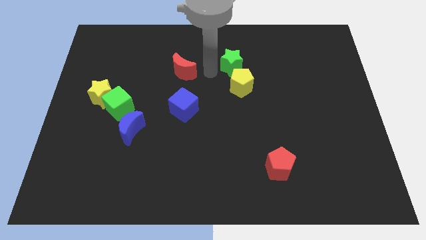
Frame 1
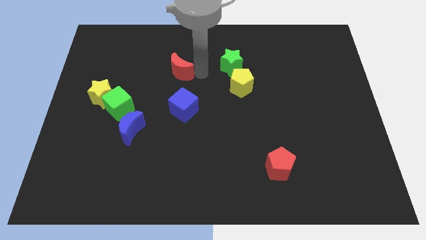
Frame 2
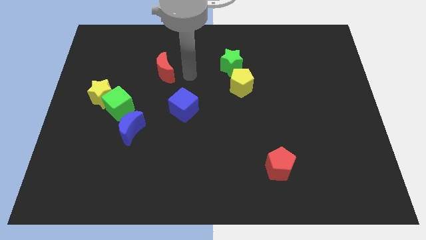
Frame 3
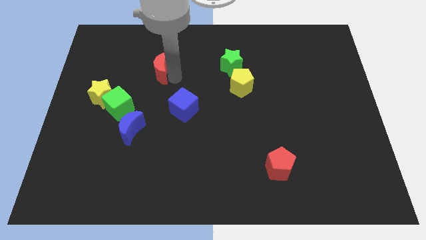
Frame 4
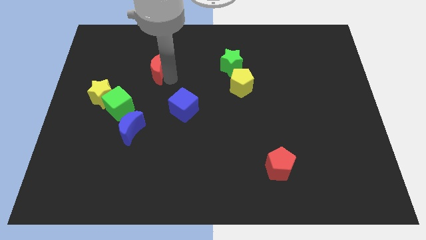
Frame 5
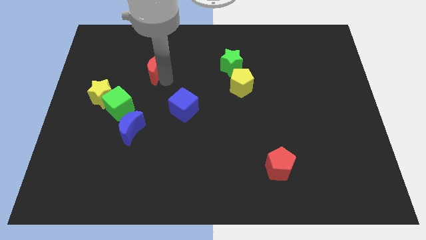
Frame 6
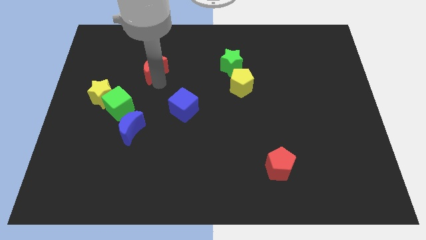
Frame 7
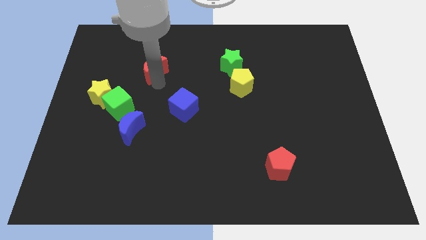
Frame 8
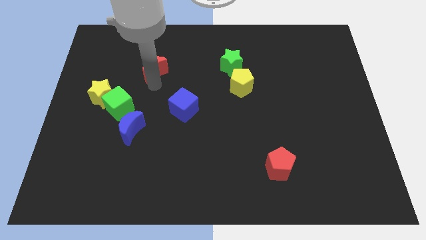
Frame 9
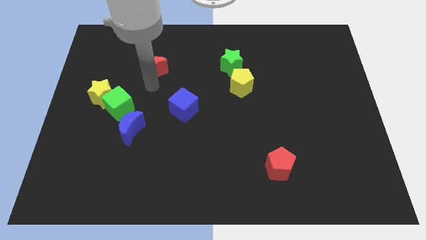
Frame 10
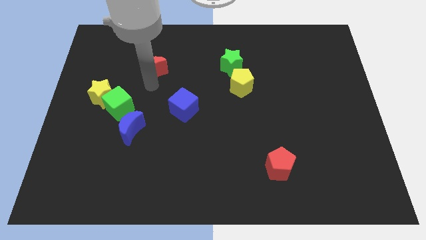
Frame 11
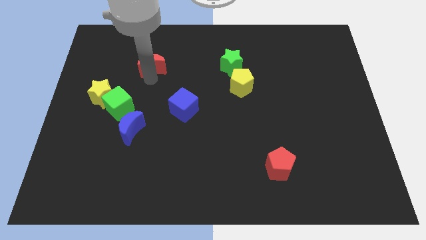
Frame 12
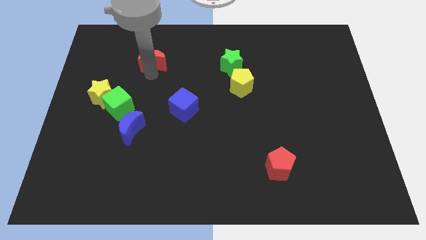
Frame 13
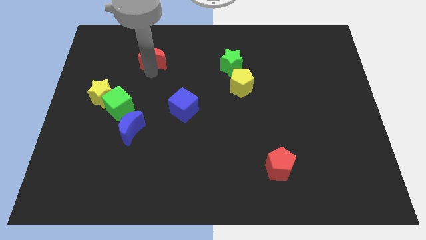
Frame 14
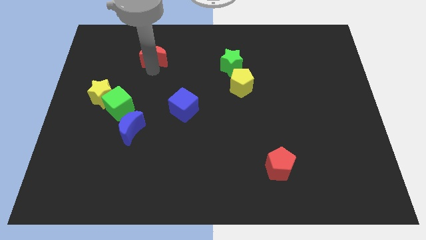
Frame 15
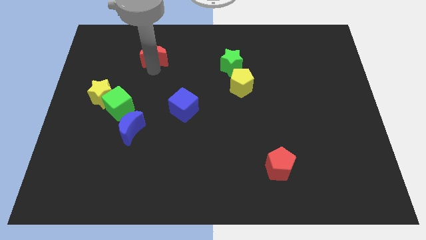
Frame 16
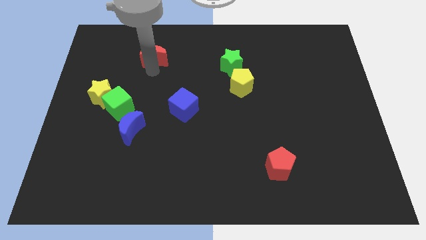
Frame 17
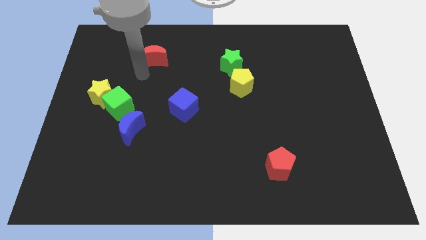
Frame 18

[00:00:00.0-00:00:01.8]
push the red crescent slightly upwards

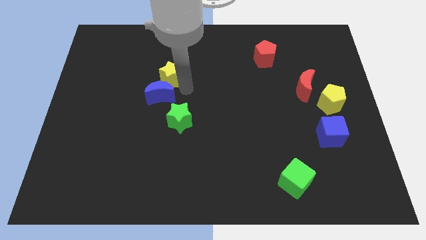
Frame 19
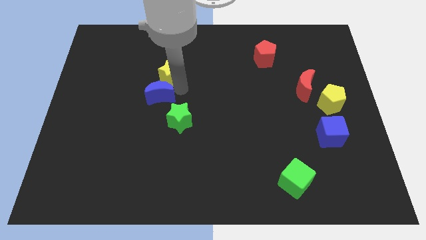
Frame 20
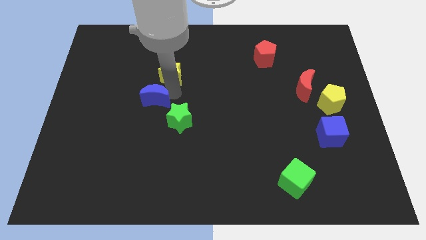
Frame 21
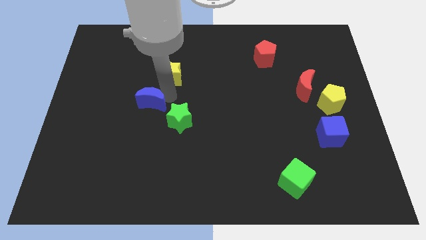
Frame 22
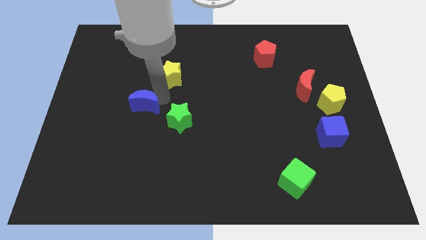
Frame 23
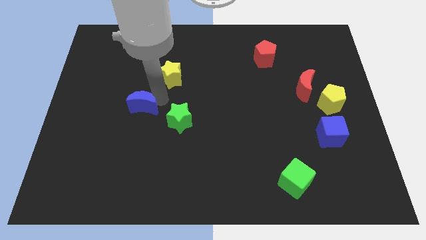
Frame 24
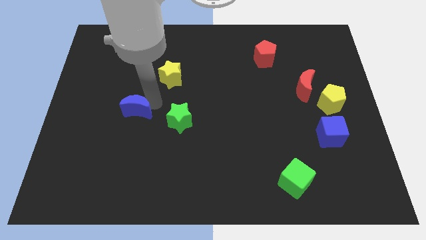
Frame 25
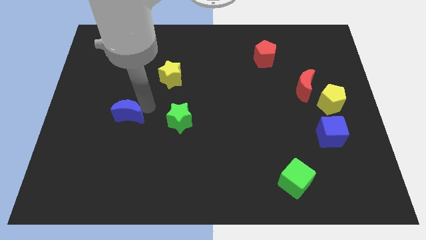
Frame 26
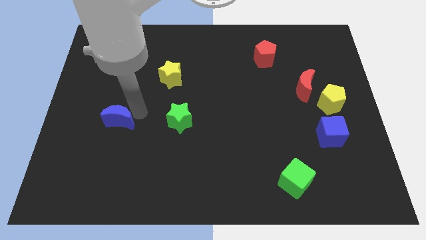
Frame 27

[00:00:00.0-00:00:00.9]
separate blue moon from the yellow star

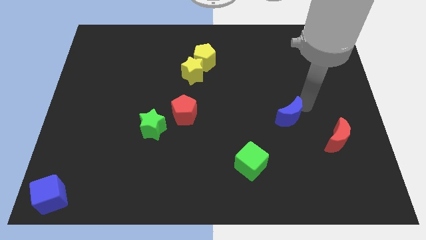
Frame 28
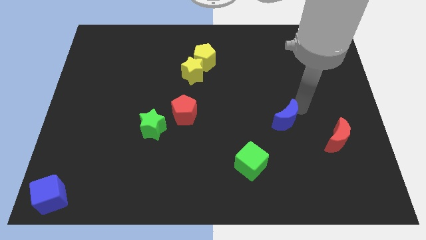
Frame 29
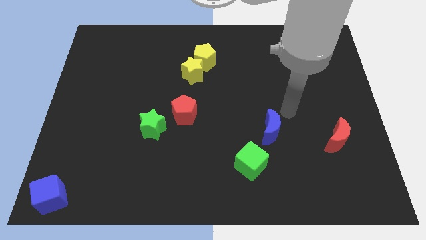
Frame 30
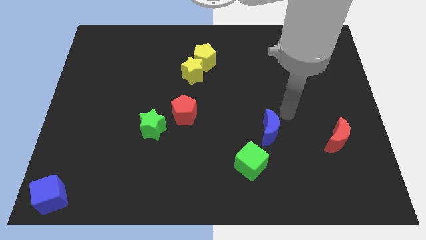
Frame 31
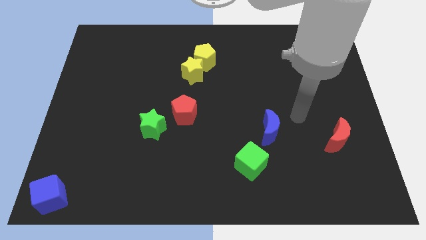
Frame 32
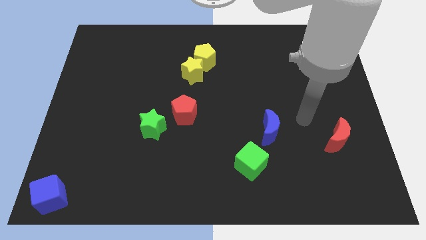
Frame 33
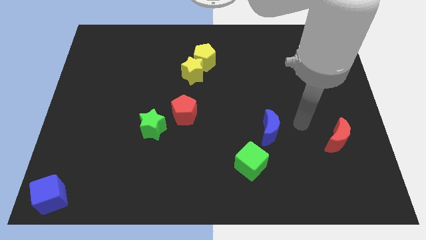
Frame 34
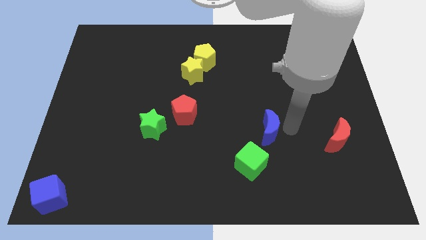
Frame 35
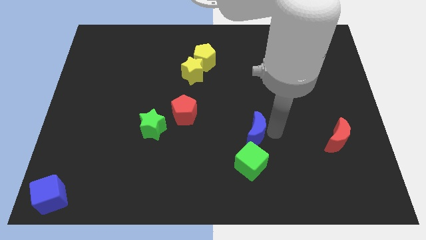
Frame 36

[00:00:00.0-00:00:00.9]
put the blue moon at the top of green cube

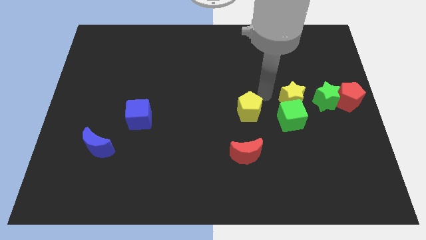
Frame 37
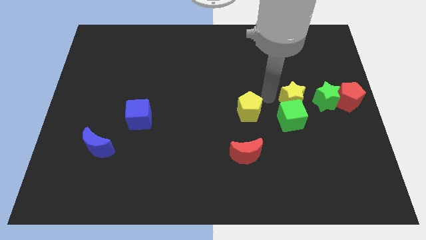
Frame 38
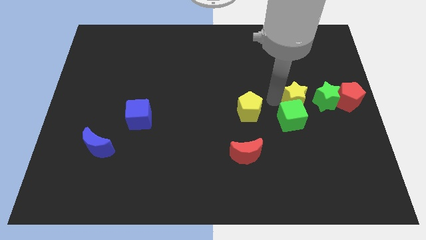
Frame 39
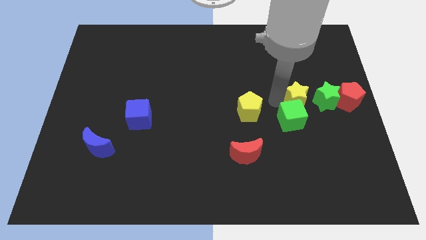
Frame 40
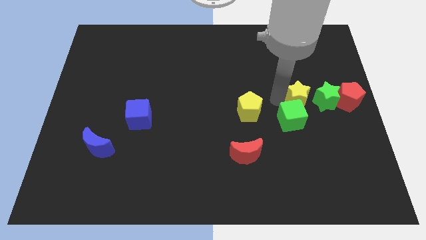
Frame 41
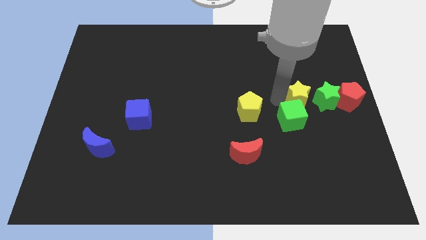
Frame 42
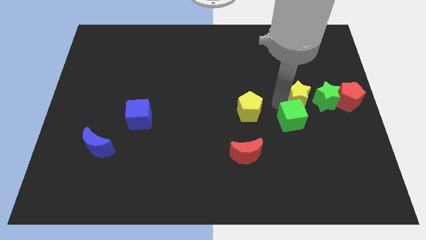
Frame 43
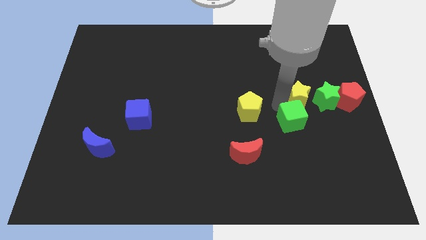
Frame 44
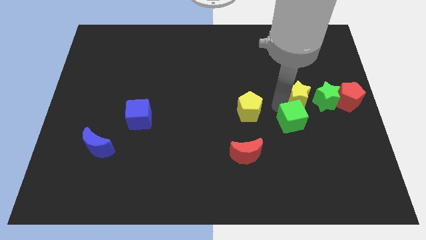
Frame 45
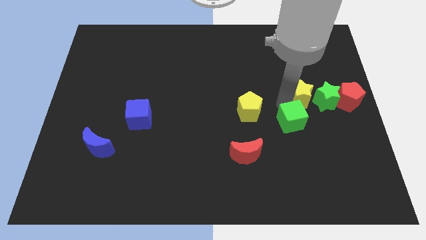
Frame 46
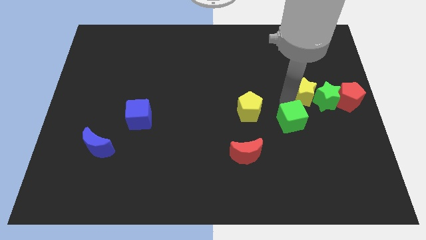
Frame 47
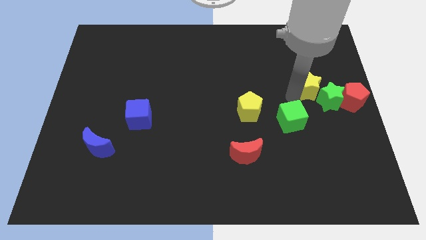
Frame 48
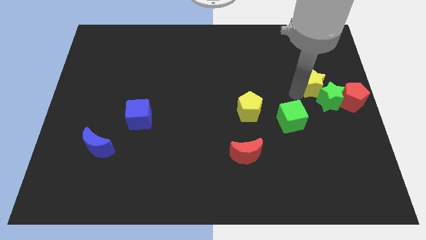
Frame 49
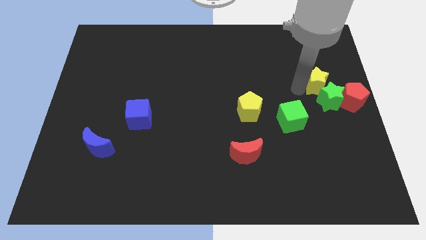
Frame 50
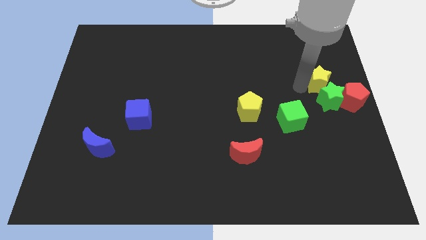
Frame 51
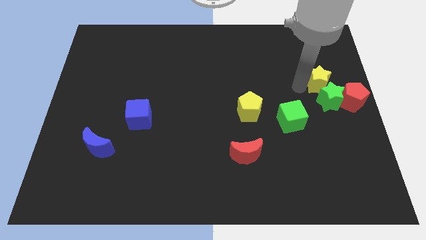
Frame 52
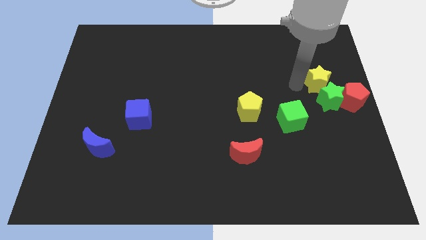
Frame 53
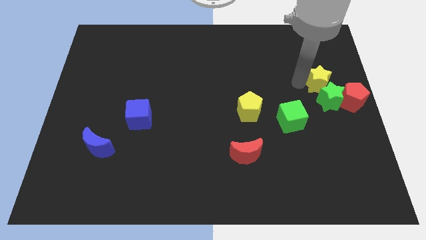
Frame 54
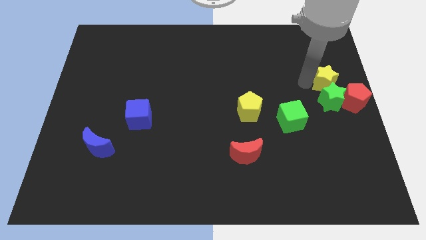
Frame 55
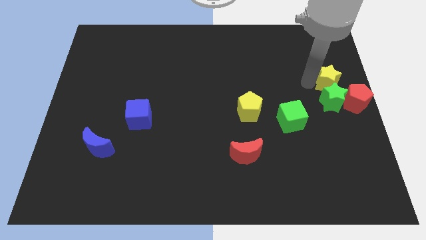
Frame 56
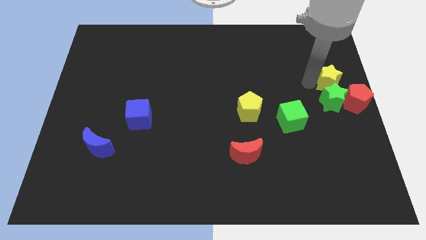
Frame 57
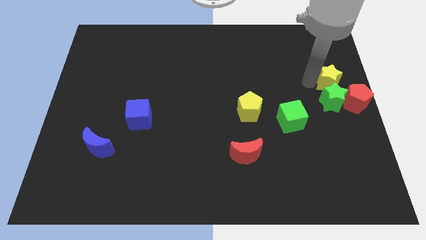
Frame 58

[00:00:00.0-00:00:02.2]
move the yellow star towards the upper side of the green star

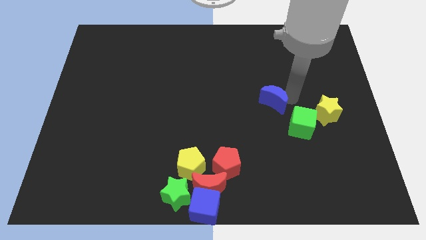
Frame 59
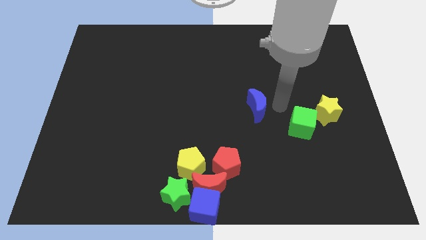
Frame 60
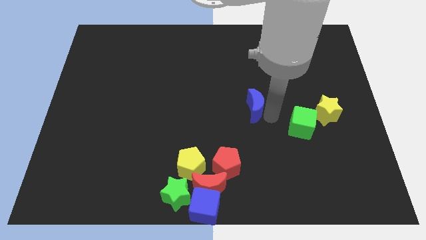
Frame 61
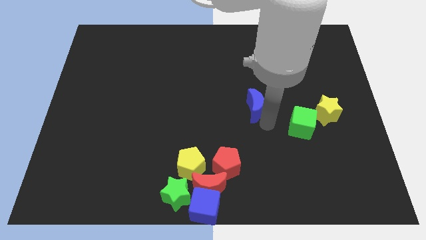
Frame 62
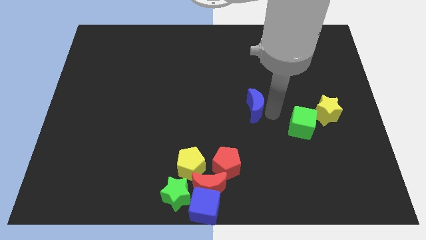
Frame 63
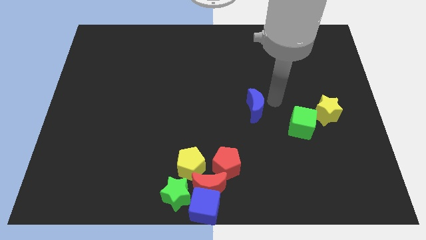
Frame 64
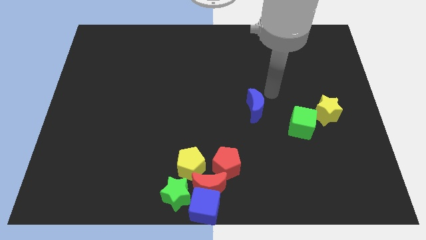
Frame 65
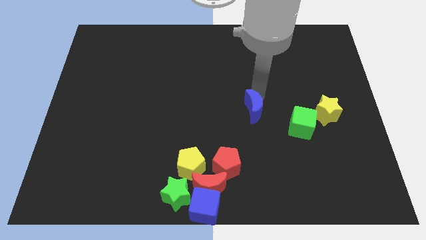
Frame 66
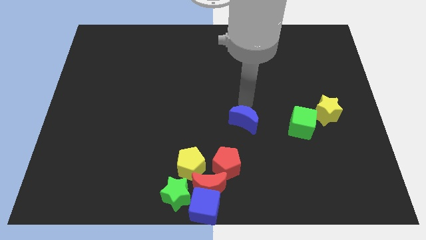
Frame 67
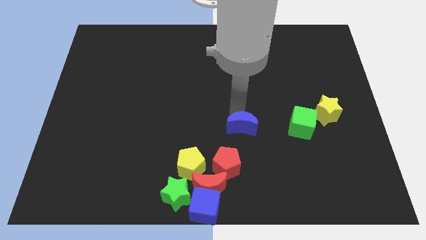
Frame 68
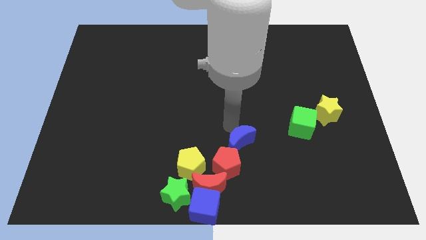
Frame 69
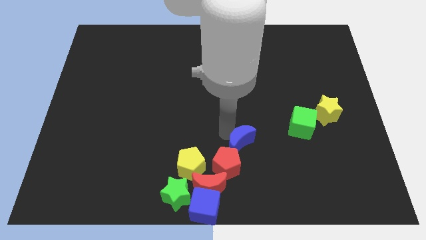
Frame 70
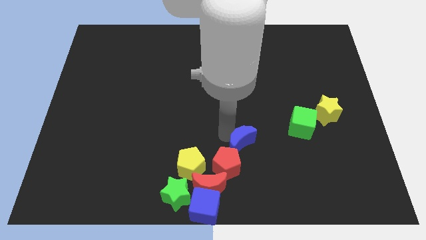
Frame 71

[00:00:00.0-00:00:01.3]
place blue crescent above red pentagon

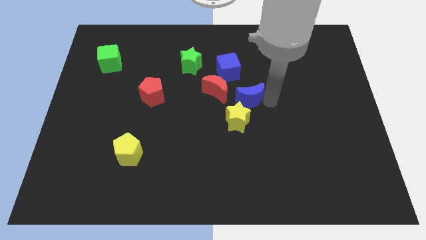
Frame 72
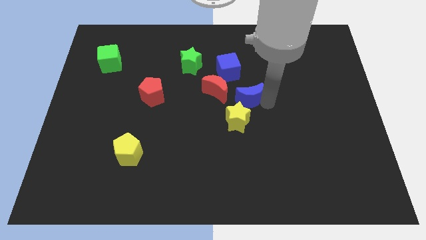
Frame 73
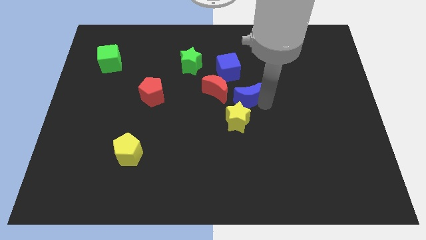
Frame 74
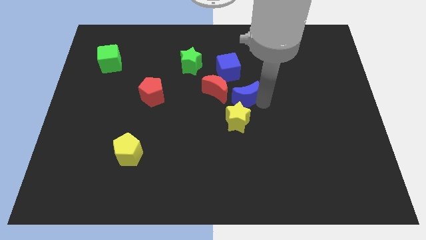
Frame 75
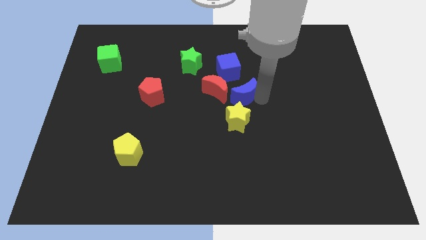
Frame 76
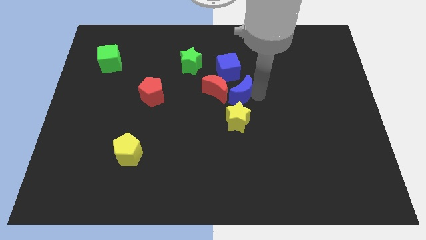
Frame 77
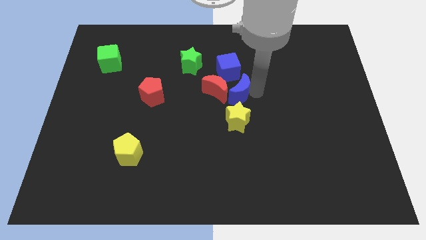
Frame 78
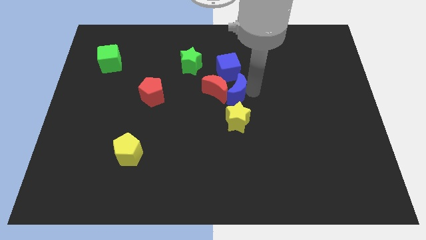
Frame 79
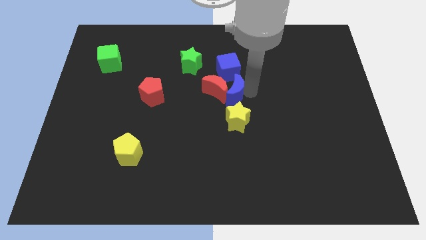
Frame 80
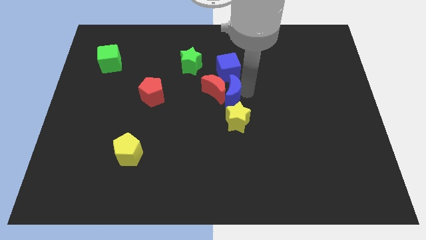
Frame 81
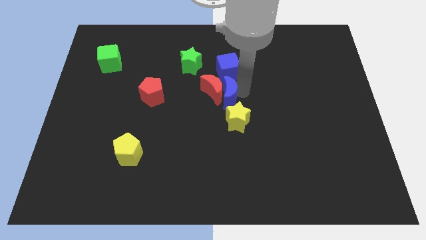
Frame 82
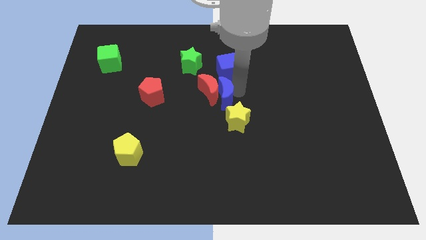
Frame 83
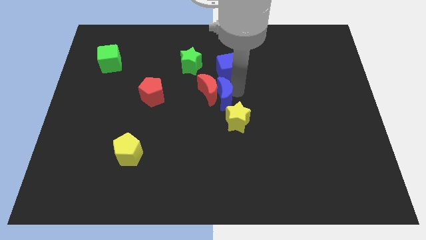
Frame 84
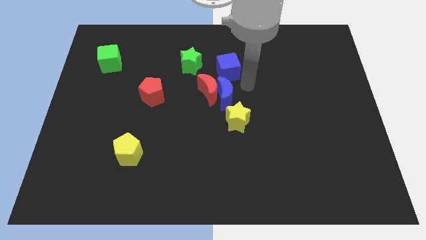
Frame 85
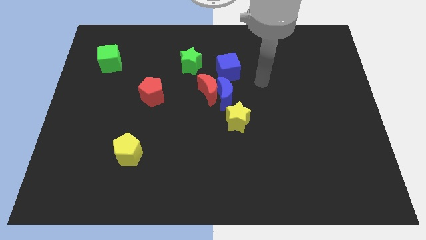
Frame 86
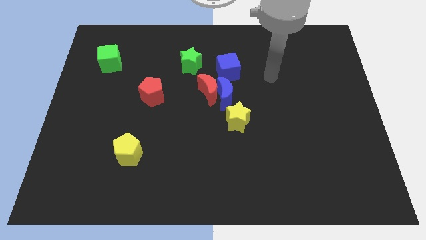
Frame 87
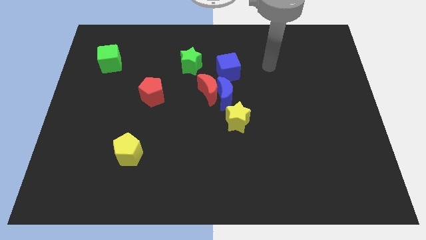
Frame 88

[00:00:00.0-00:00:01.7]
push the blue crescent to the right of the red crescent

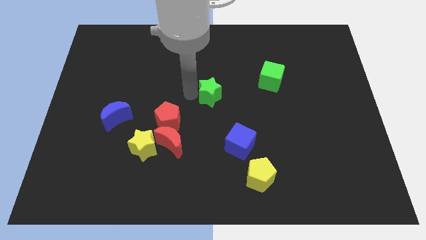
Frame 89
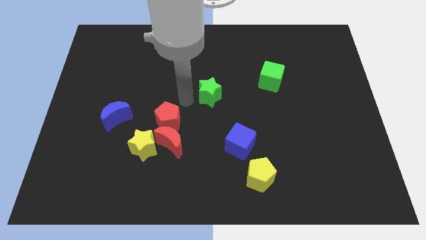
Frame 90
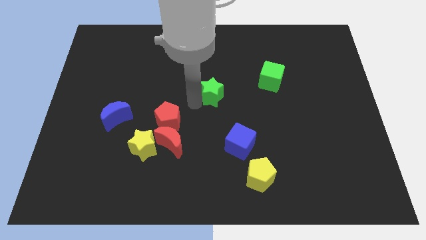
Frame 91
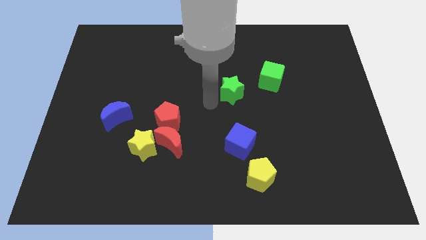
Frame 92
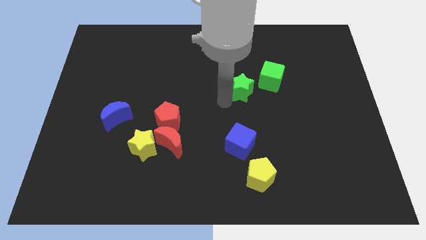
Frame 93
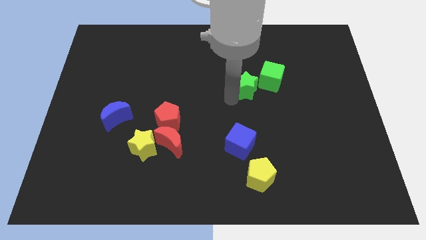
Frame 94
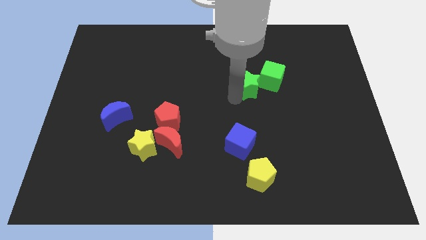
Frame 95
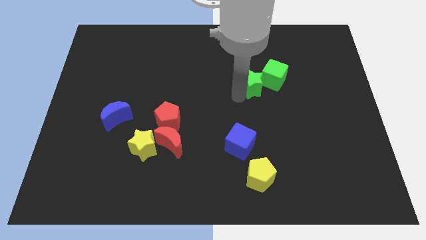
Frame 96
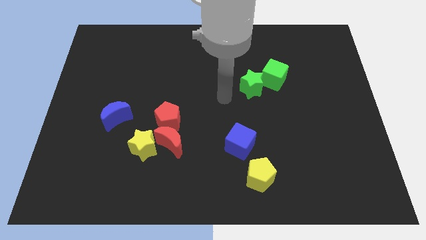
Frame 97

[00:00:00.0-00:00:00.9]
move the green star into the green cube
